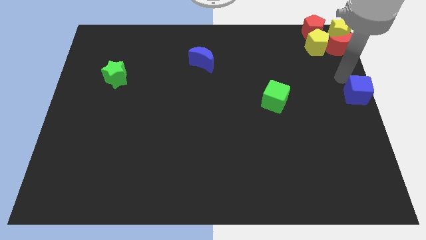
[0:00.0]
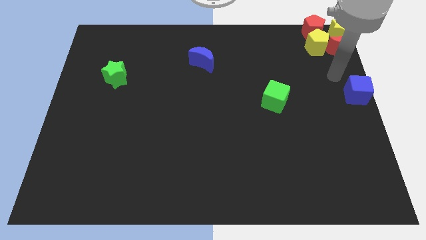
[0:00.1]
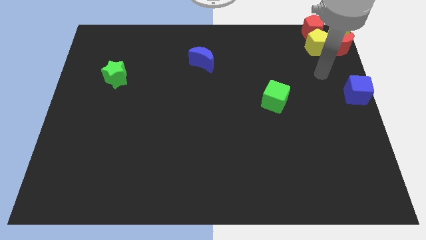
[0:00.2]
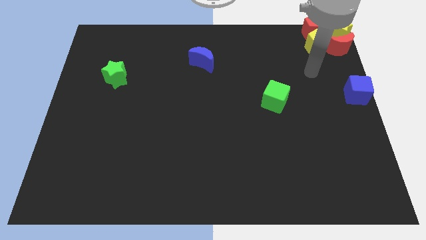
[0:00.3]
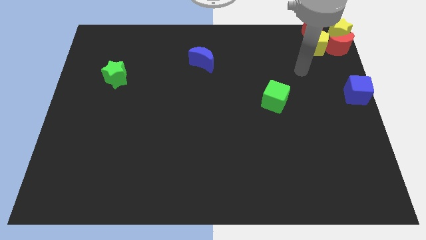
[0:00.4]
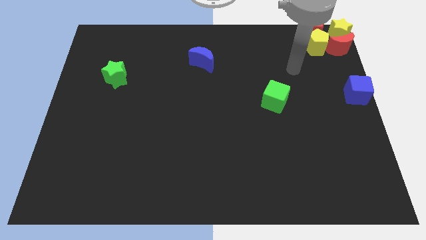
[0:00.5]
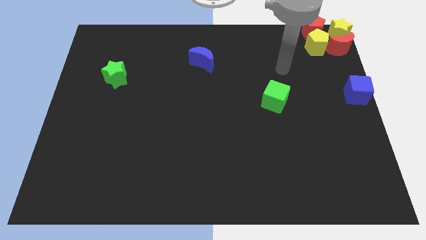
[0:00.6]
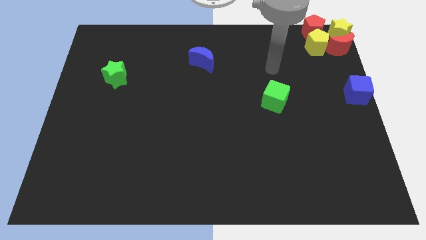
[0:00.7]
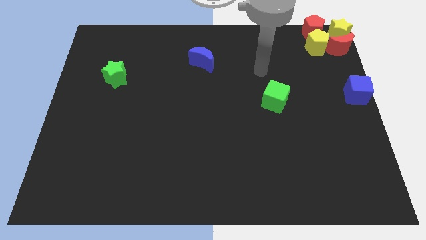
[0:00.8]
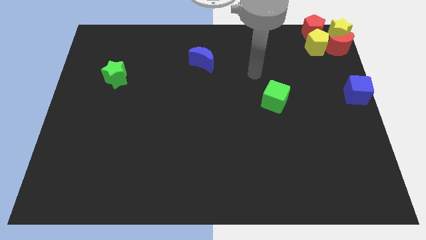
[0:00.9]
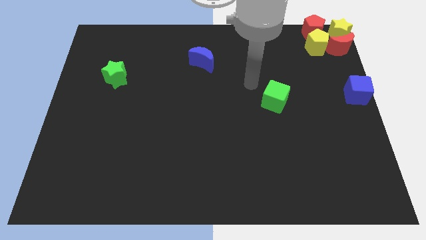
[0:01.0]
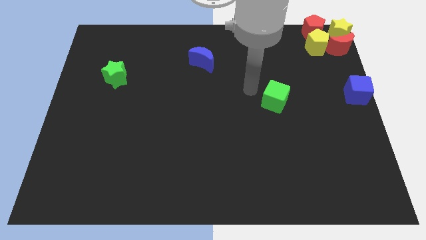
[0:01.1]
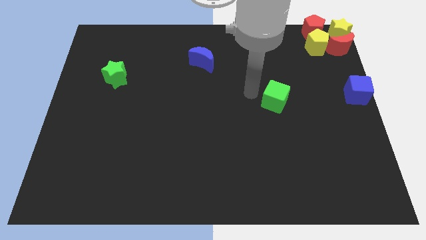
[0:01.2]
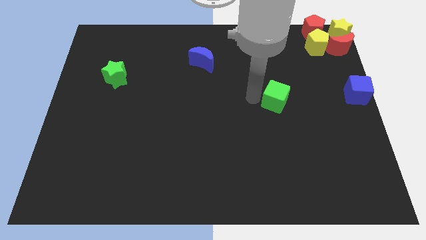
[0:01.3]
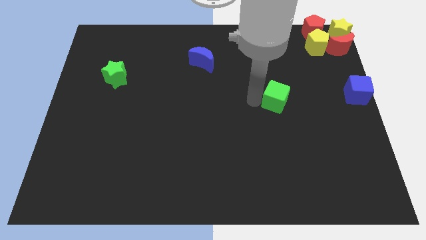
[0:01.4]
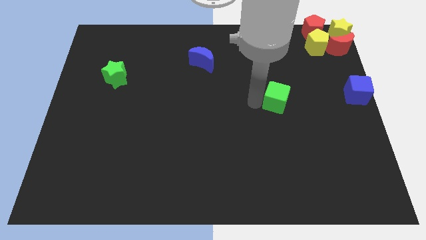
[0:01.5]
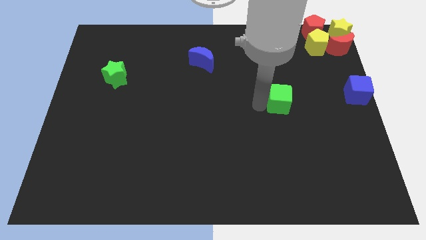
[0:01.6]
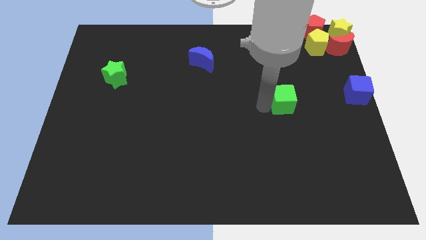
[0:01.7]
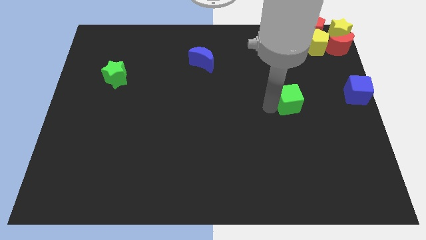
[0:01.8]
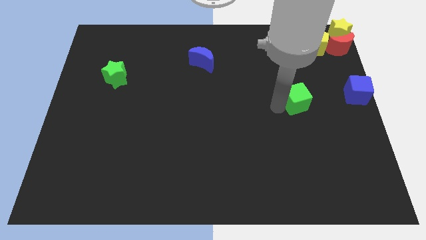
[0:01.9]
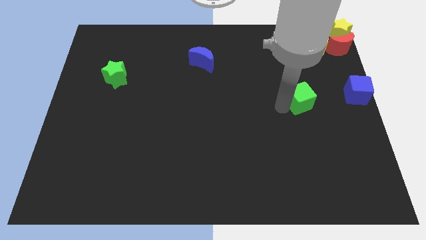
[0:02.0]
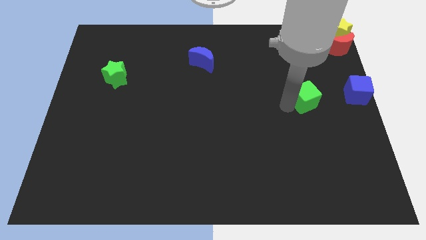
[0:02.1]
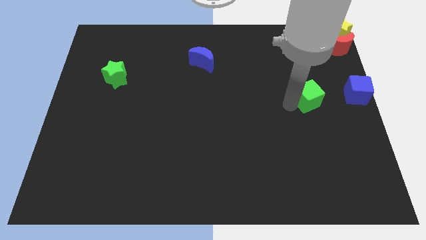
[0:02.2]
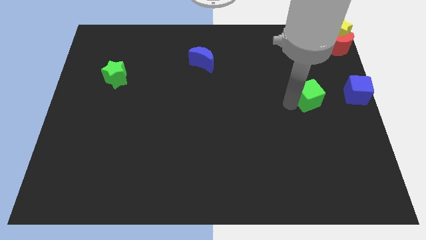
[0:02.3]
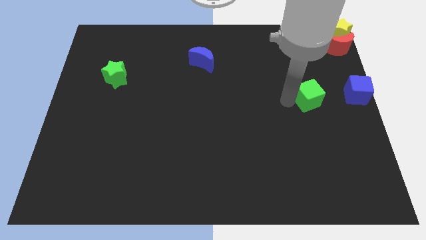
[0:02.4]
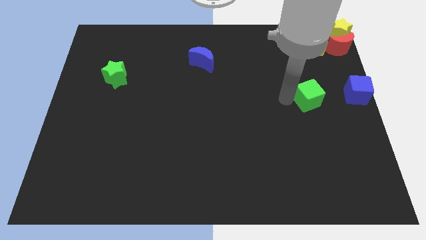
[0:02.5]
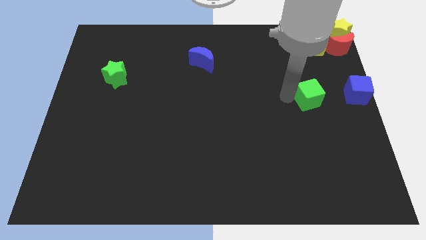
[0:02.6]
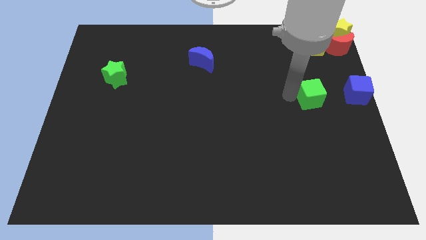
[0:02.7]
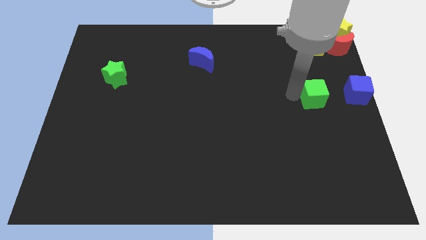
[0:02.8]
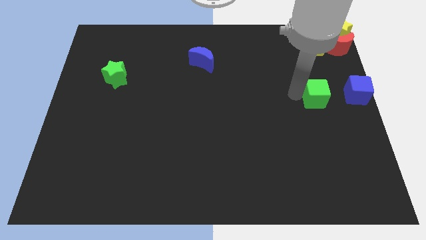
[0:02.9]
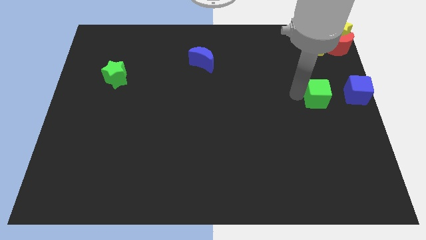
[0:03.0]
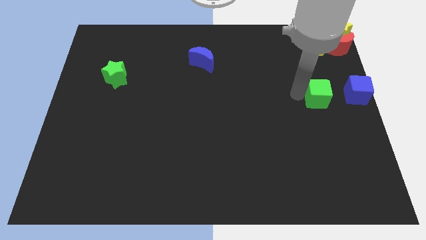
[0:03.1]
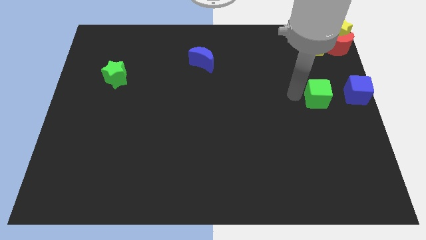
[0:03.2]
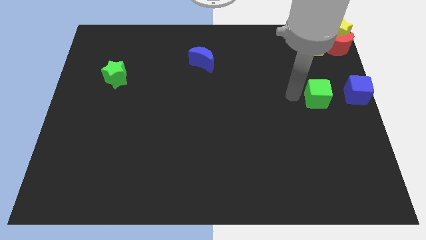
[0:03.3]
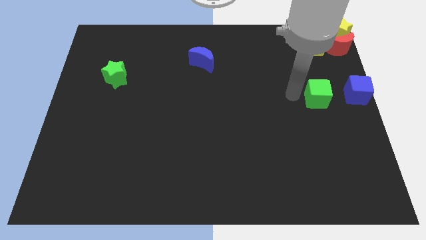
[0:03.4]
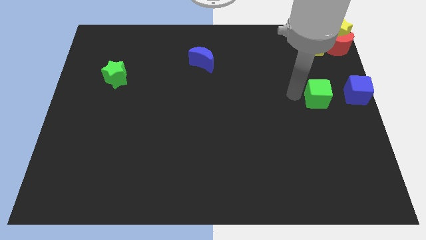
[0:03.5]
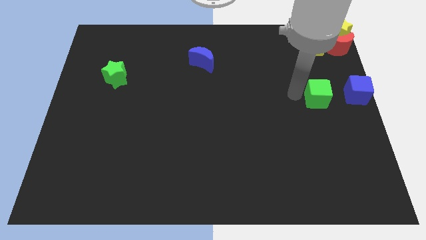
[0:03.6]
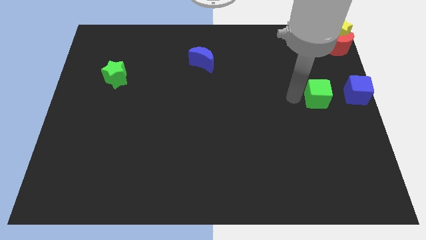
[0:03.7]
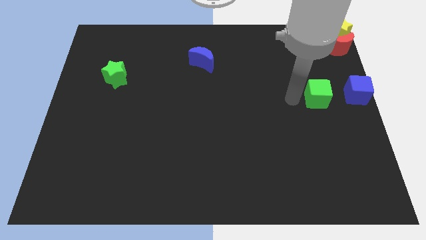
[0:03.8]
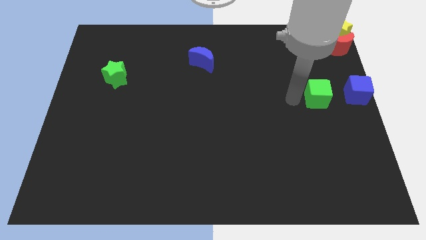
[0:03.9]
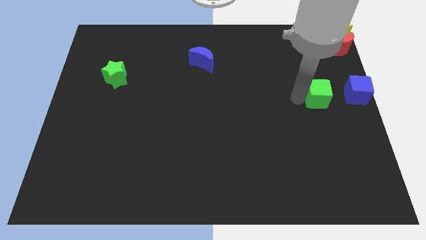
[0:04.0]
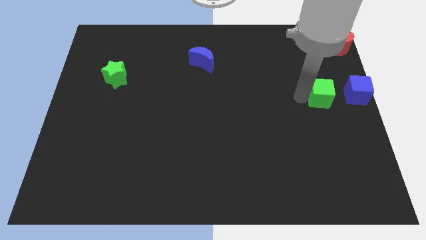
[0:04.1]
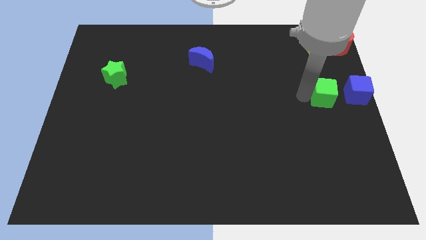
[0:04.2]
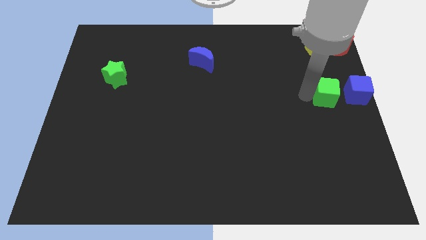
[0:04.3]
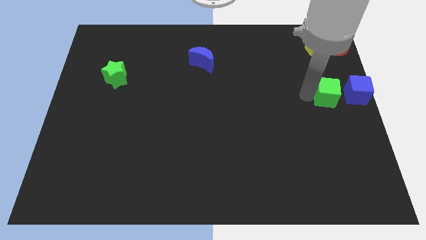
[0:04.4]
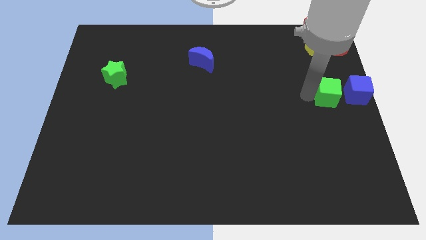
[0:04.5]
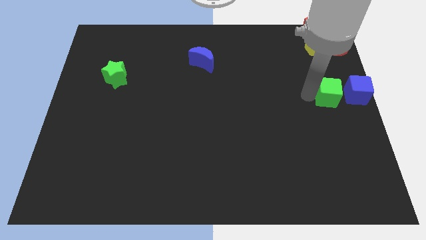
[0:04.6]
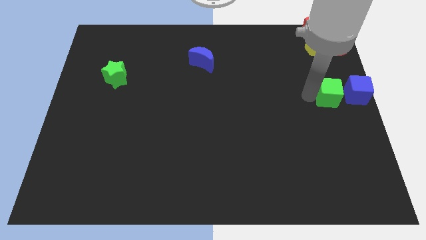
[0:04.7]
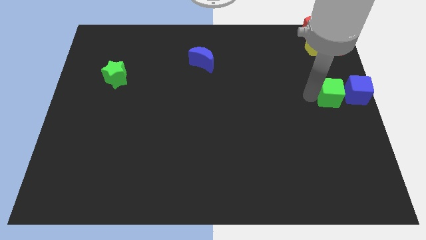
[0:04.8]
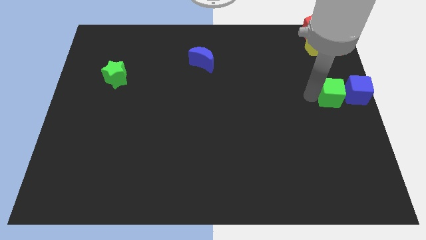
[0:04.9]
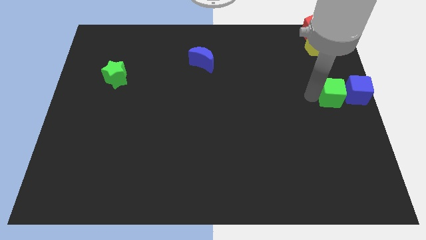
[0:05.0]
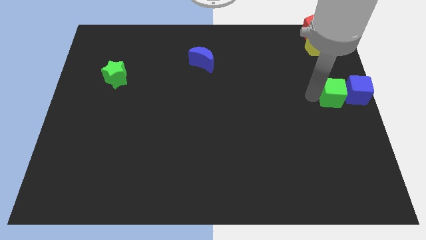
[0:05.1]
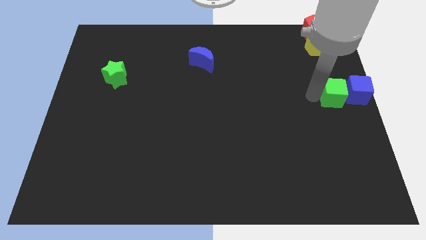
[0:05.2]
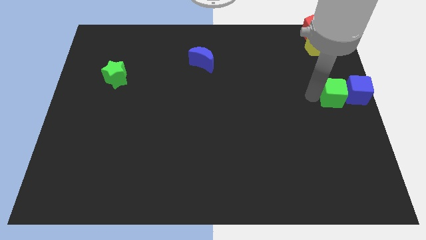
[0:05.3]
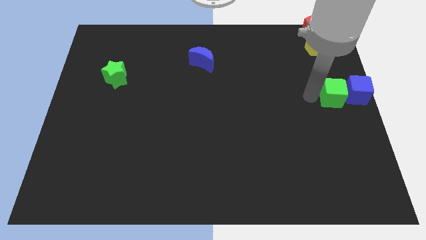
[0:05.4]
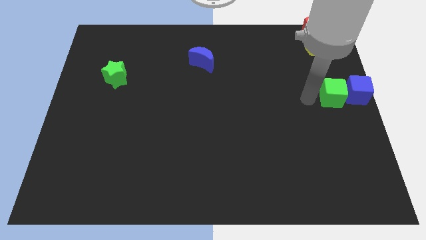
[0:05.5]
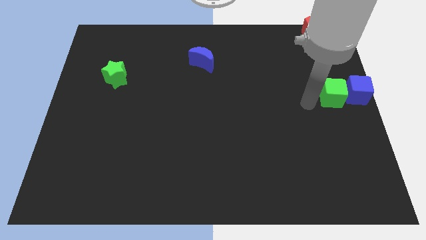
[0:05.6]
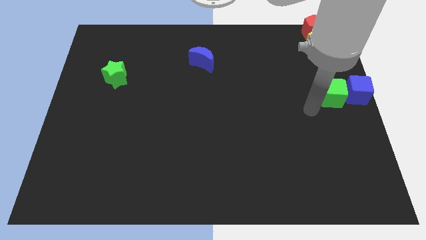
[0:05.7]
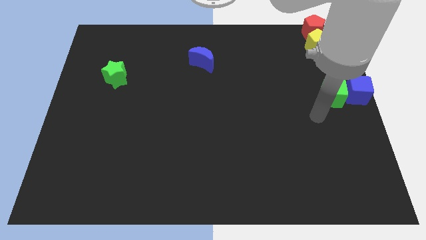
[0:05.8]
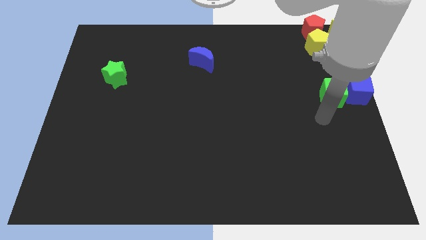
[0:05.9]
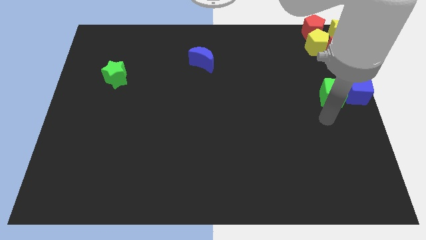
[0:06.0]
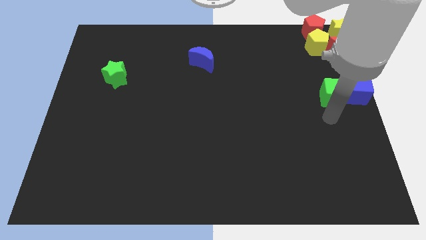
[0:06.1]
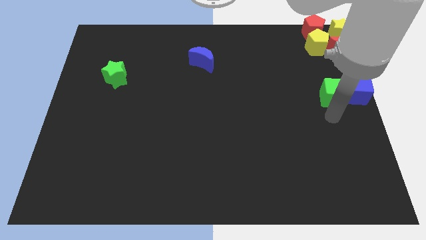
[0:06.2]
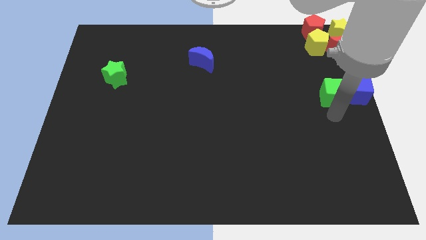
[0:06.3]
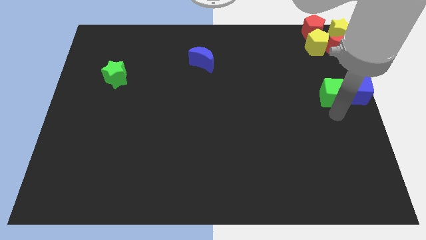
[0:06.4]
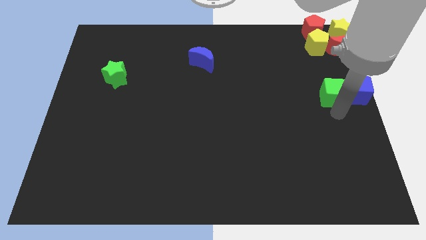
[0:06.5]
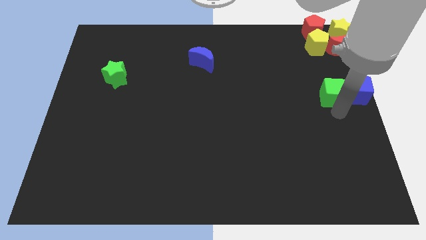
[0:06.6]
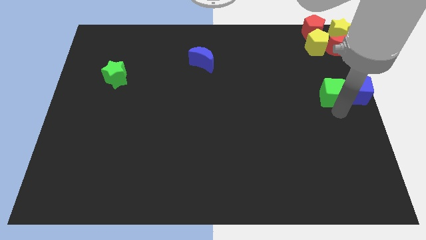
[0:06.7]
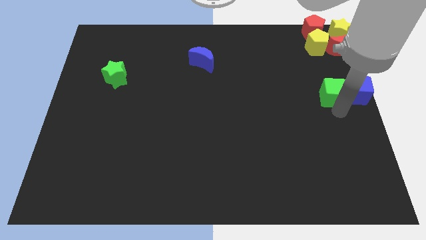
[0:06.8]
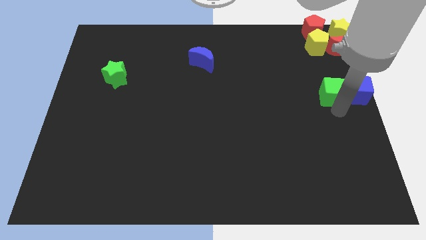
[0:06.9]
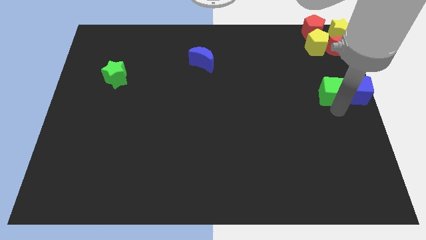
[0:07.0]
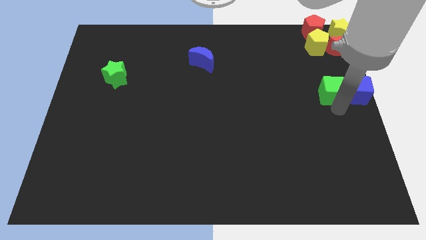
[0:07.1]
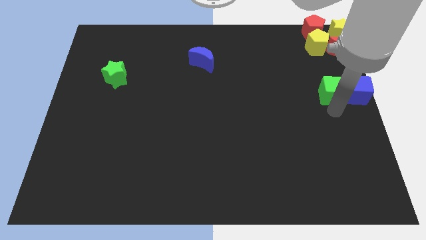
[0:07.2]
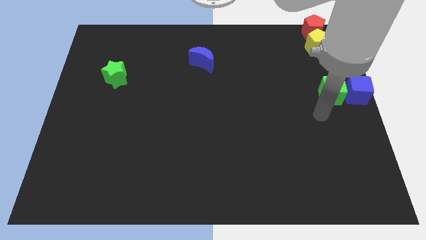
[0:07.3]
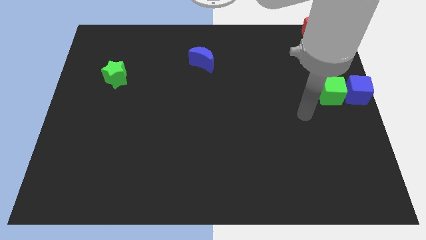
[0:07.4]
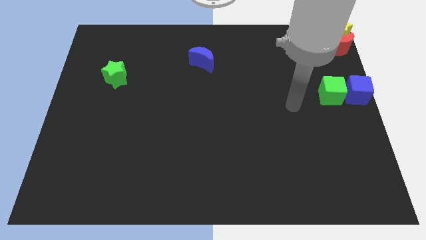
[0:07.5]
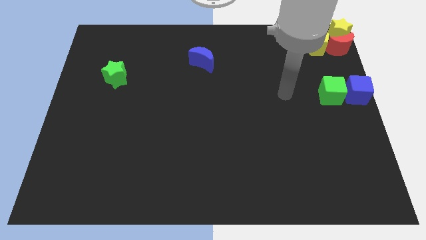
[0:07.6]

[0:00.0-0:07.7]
push the green cube to the left side of the blue cube

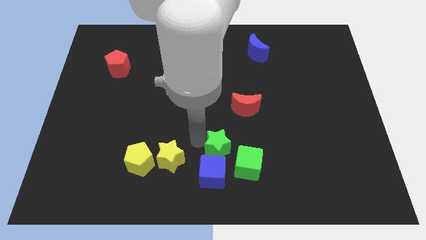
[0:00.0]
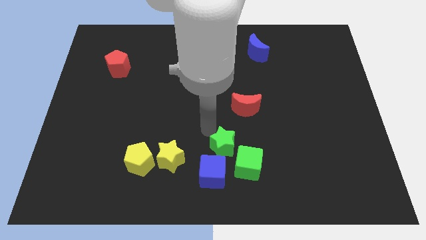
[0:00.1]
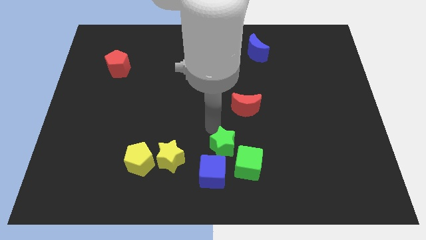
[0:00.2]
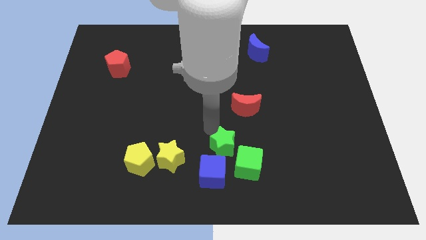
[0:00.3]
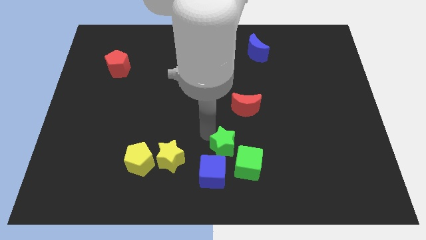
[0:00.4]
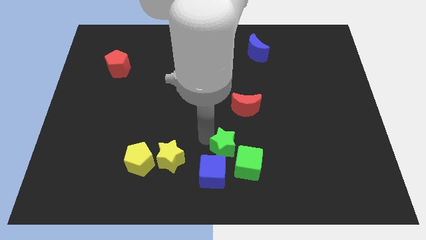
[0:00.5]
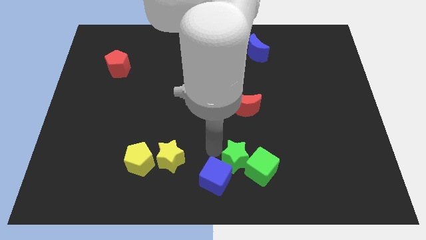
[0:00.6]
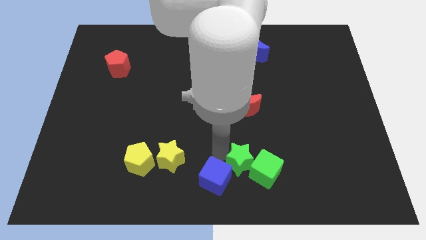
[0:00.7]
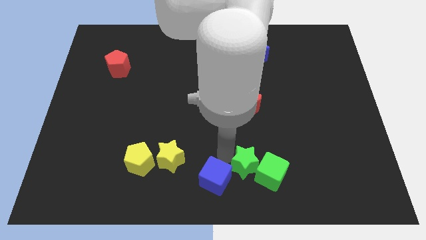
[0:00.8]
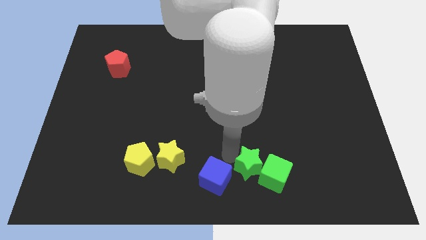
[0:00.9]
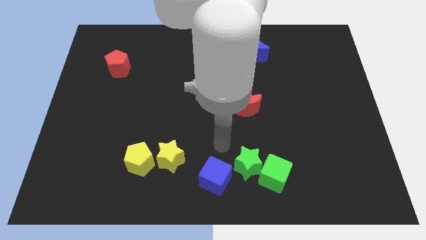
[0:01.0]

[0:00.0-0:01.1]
place the green star in between blue cube and green cube

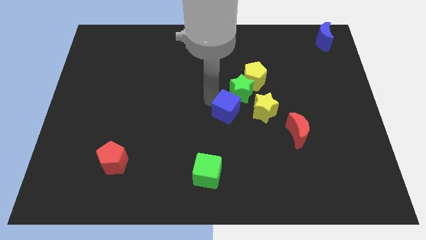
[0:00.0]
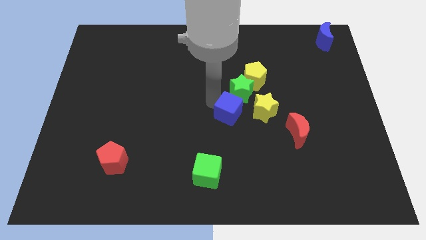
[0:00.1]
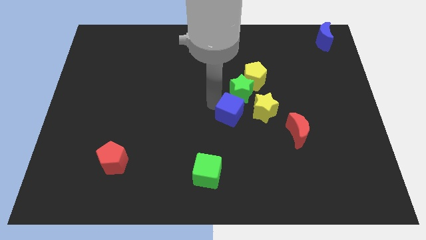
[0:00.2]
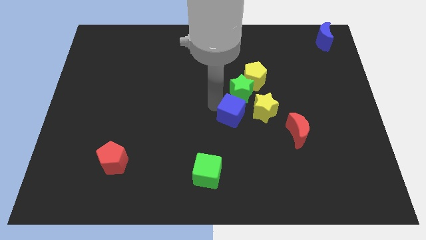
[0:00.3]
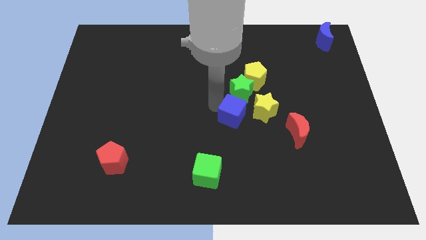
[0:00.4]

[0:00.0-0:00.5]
move the blue cube towards the yellow star
